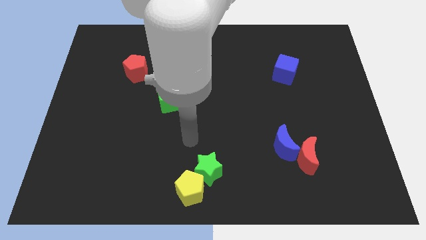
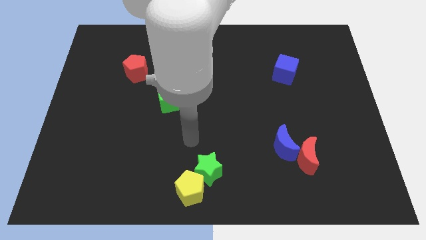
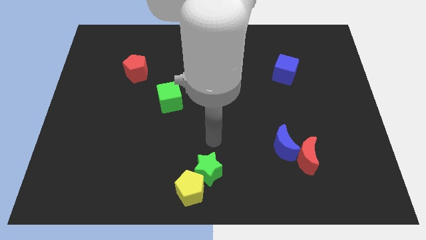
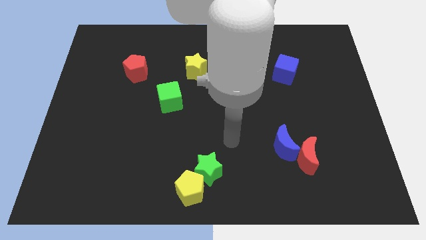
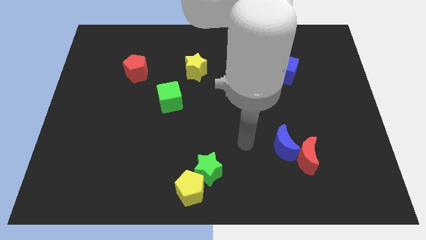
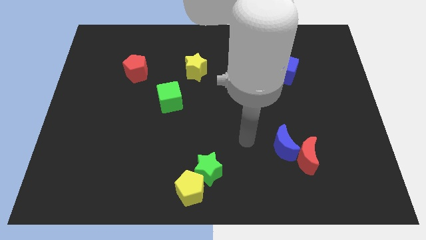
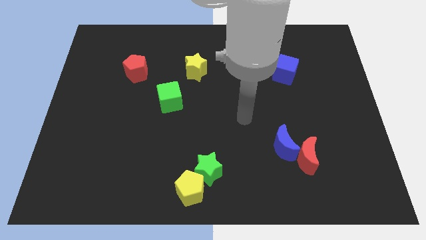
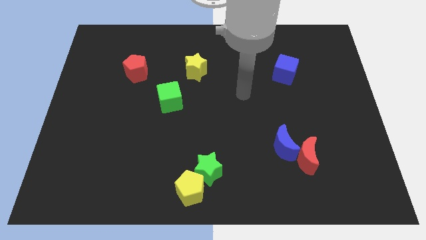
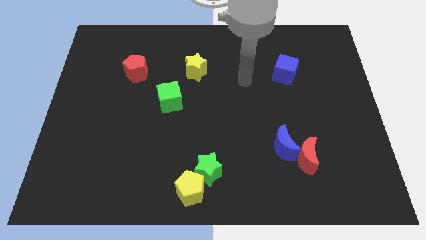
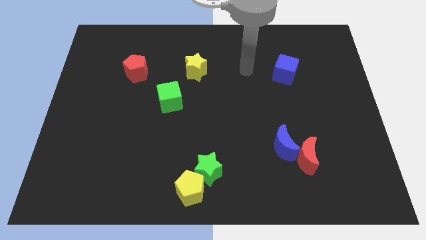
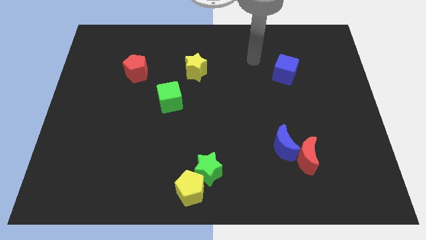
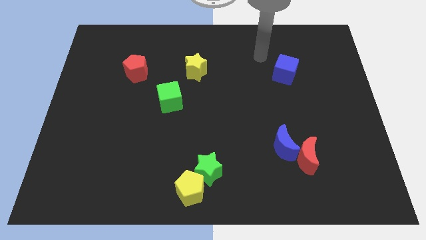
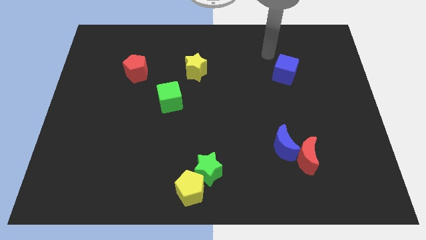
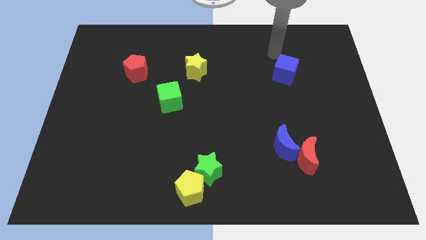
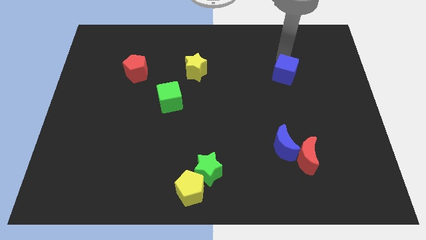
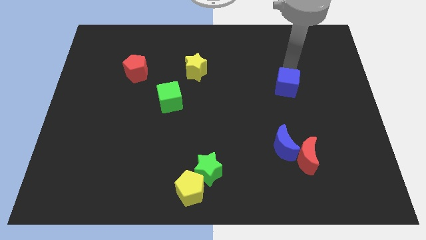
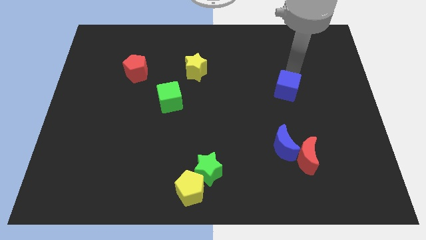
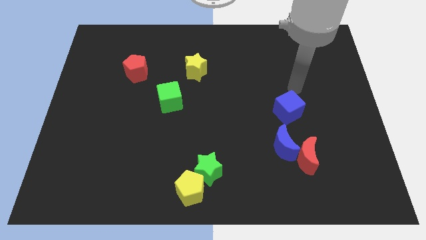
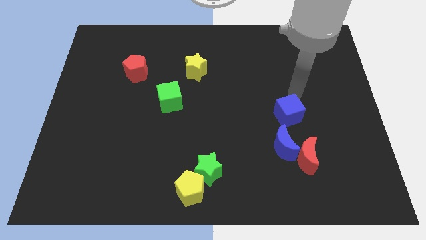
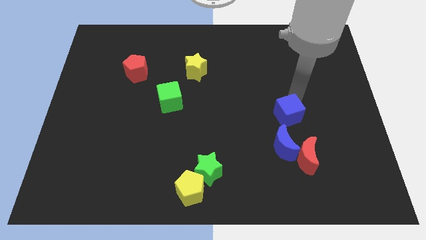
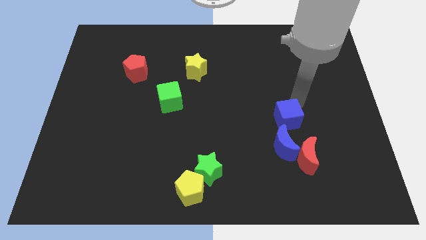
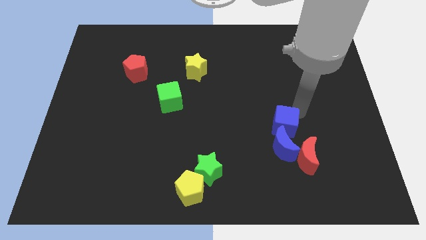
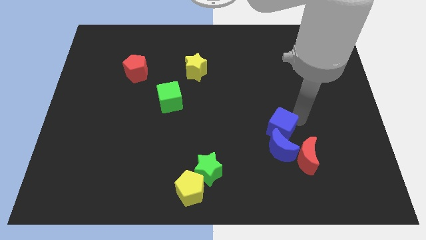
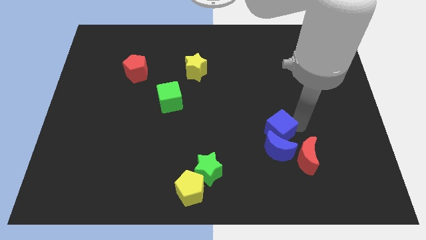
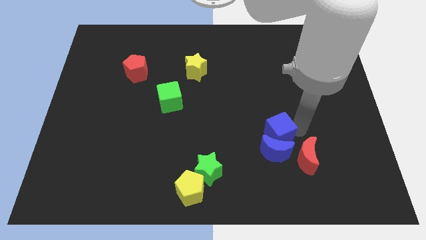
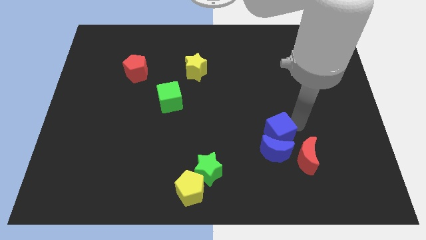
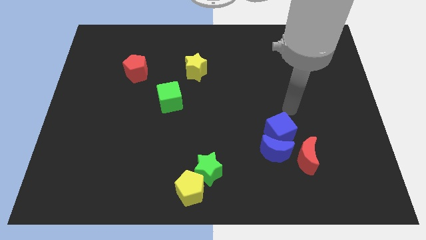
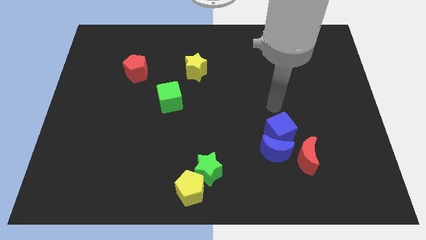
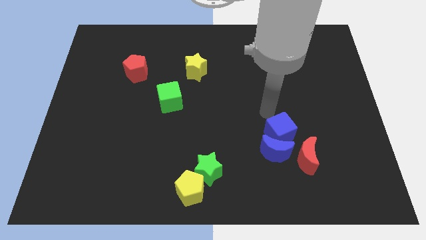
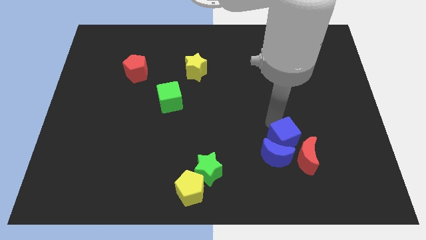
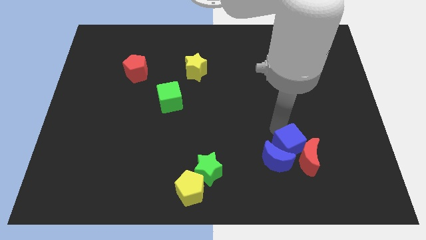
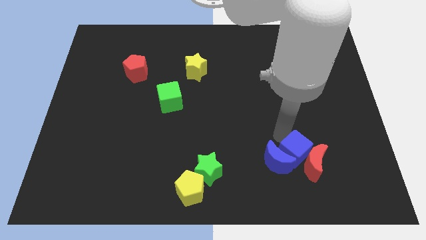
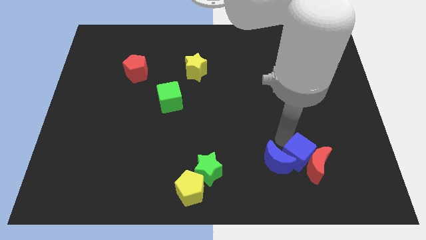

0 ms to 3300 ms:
put the blue cube next to the red moon

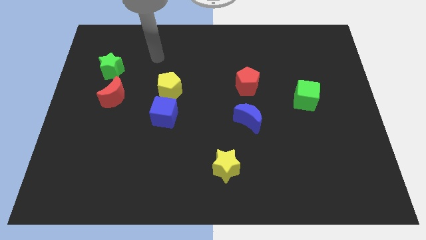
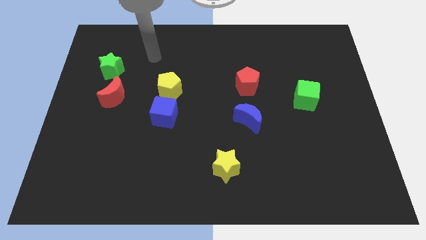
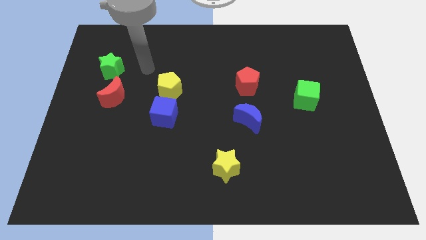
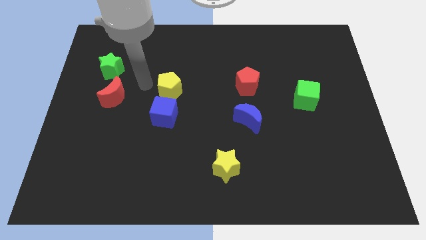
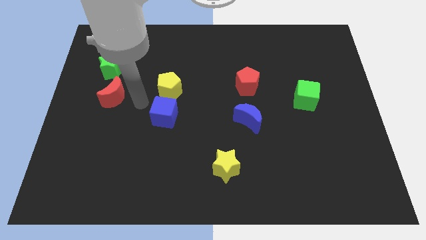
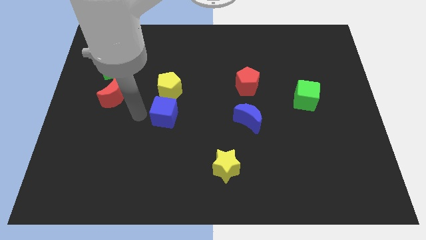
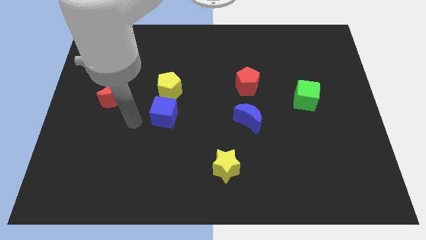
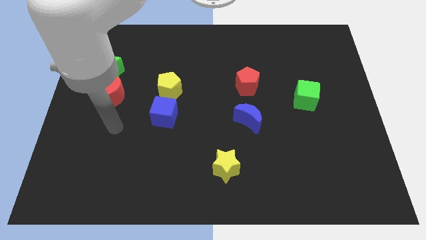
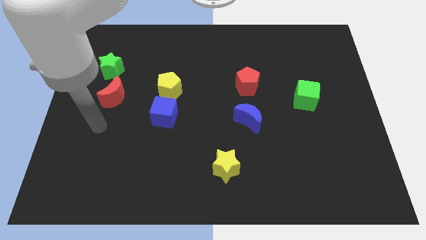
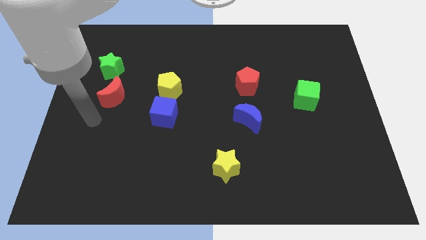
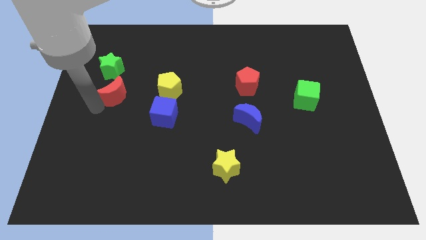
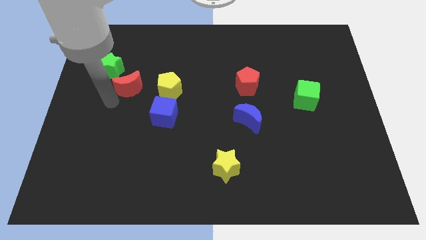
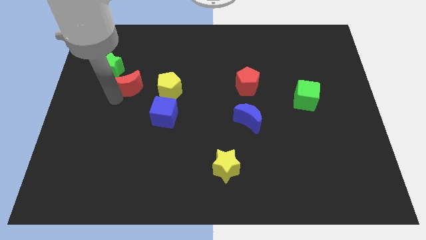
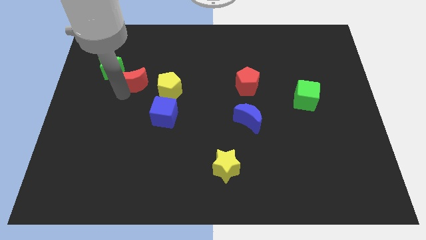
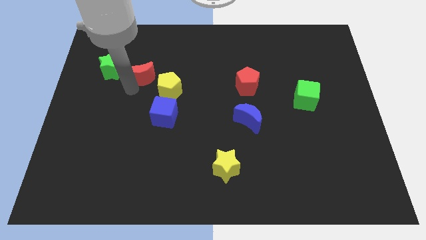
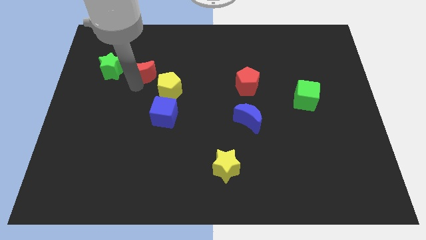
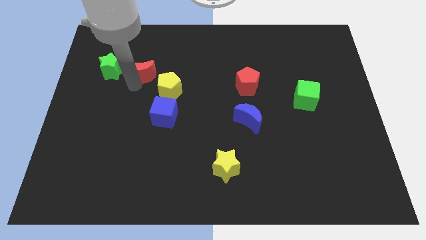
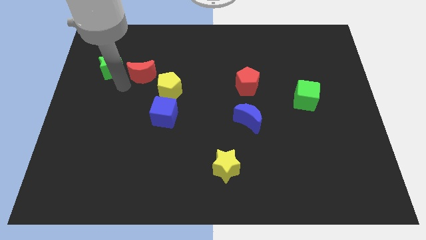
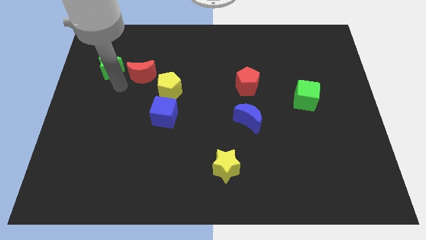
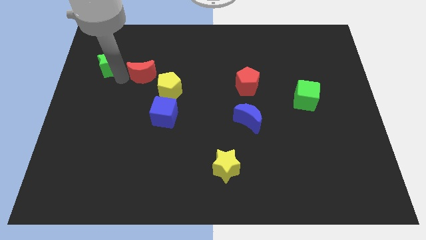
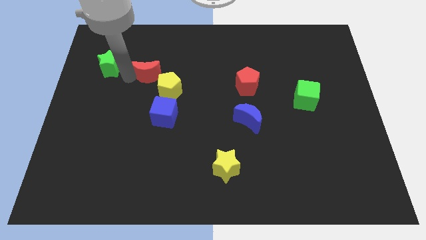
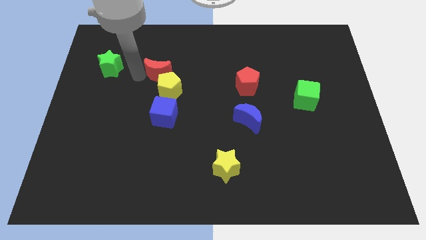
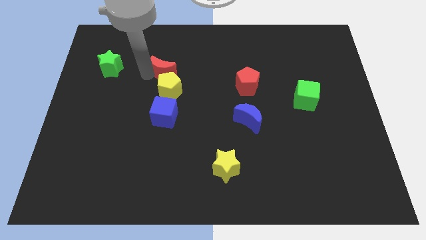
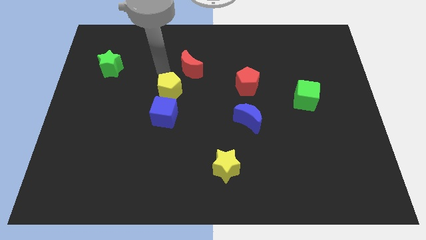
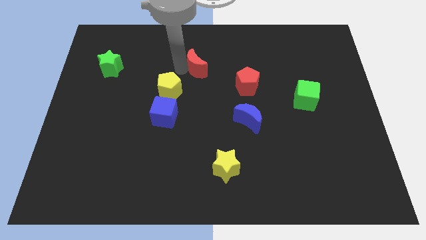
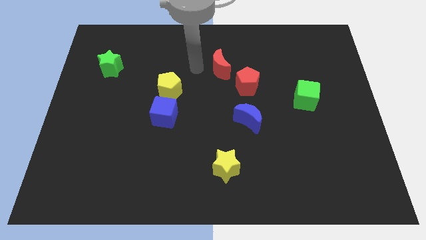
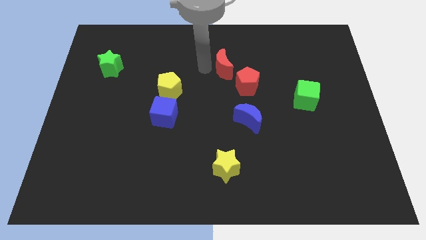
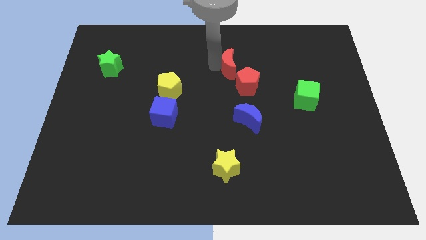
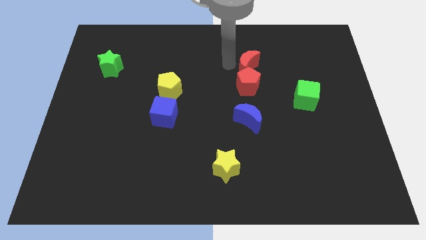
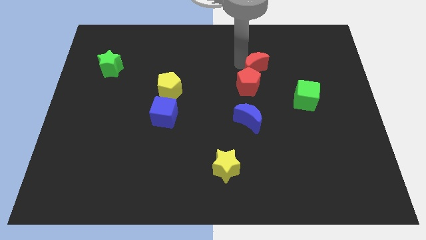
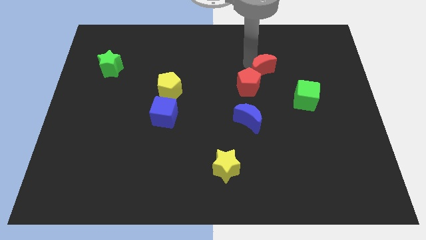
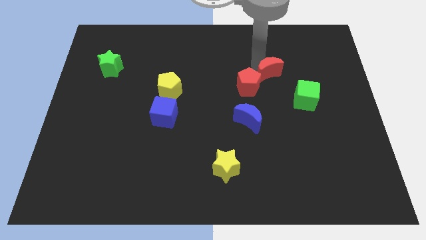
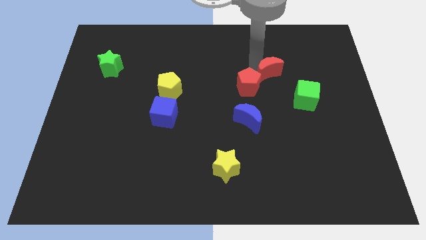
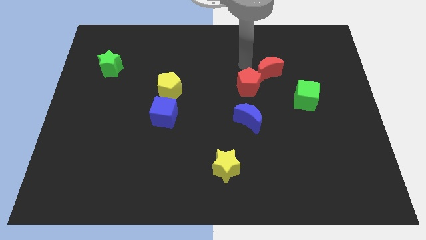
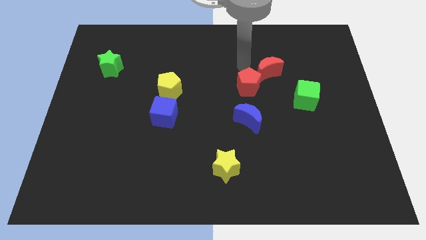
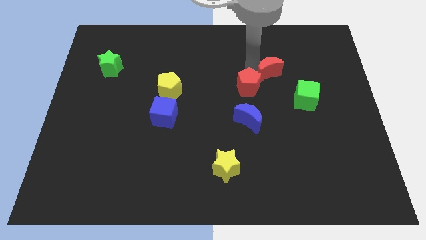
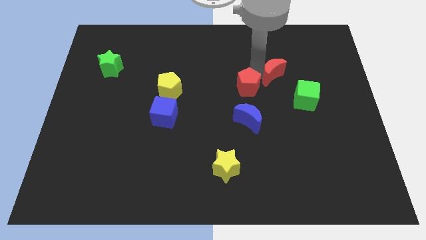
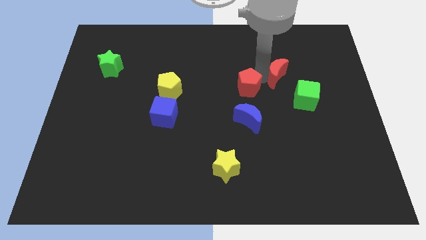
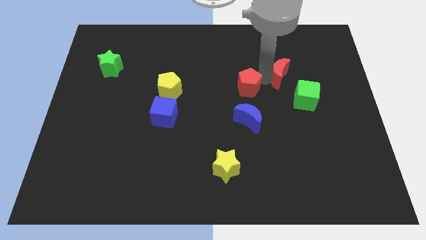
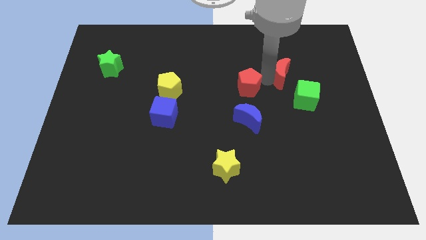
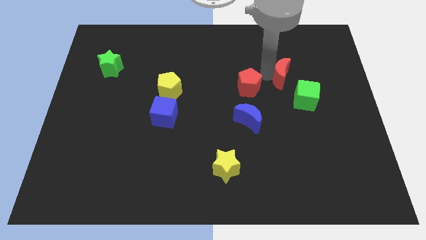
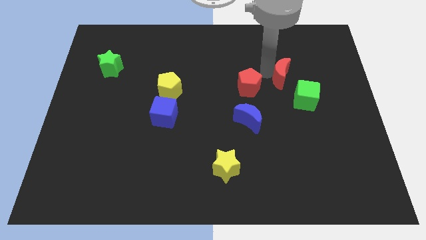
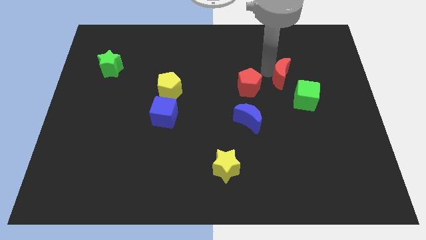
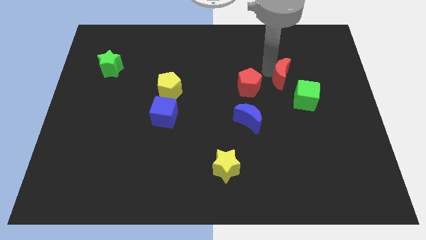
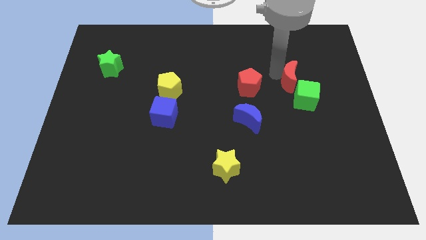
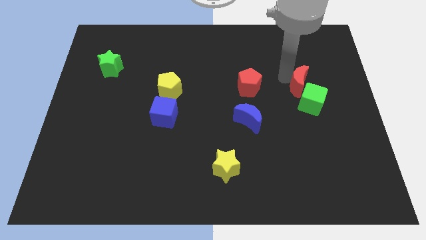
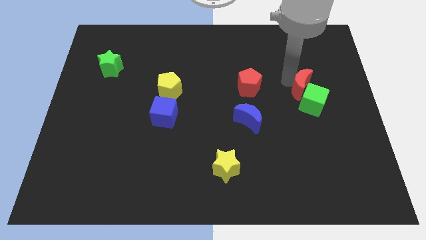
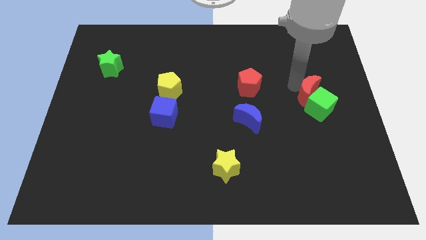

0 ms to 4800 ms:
slide the red moon towards the green cube

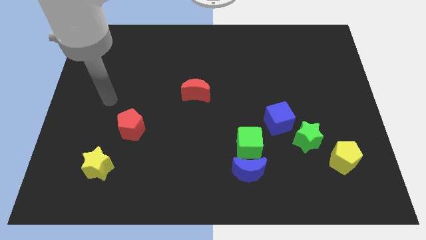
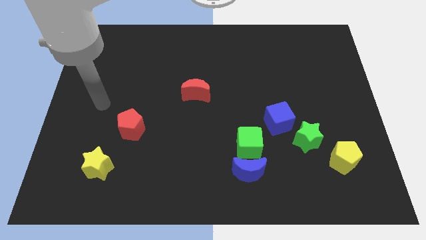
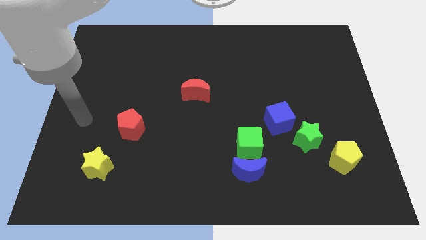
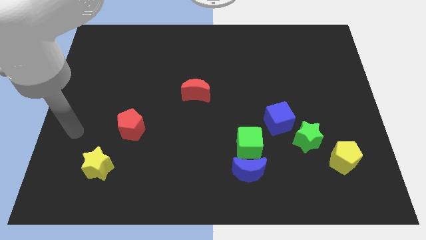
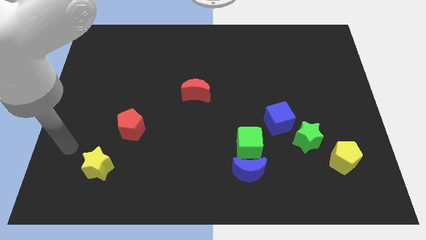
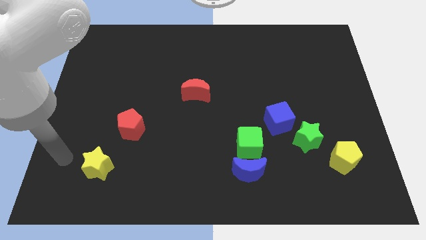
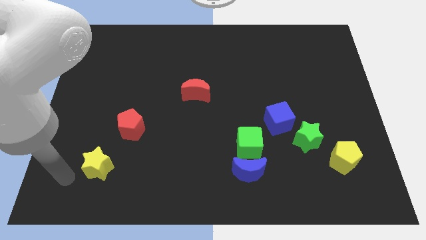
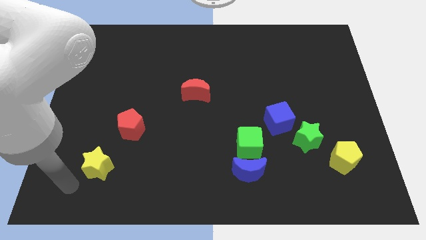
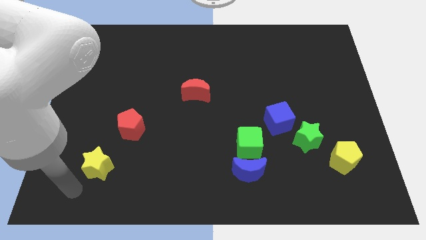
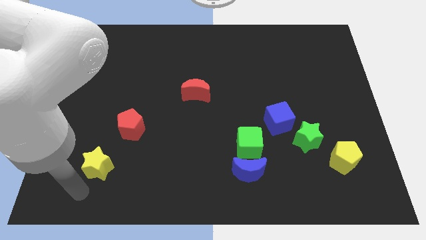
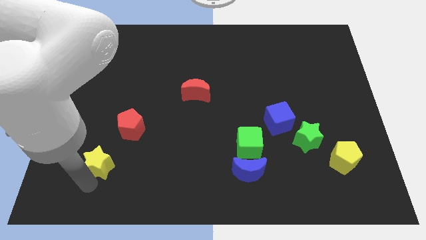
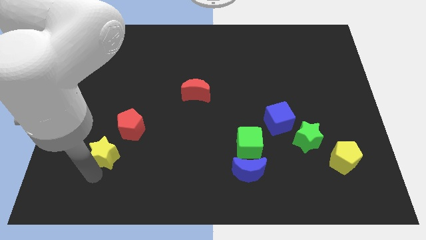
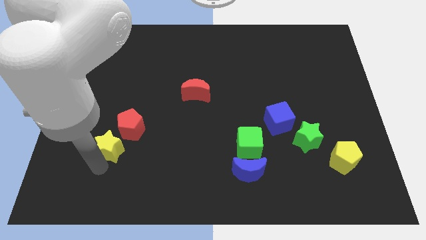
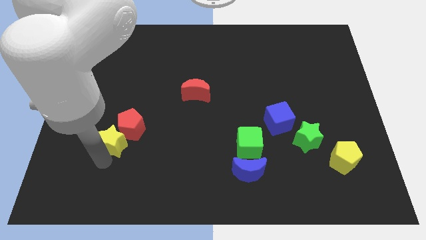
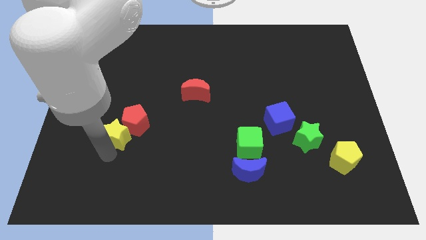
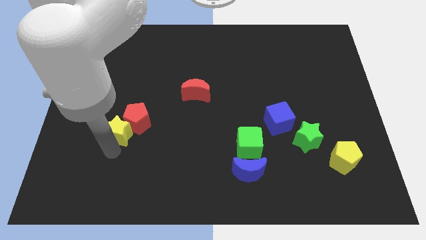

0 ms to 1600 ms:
slide the yellow star next to the red pentagon
